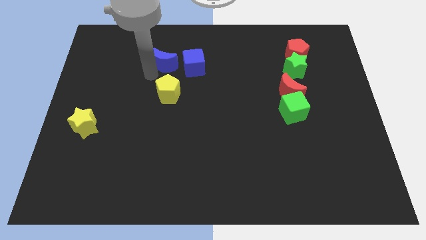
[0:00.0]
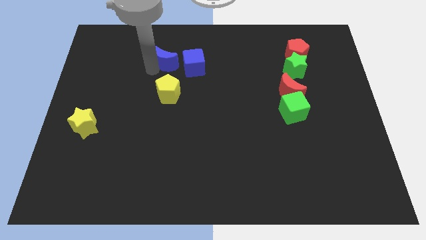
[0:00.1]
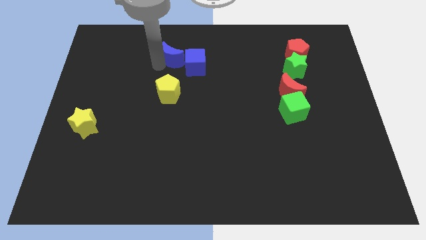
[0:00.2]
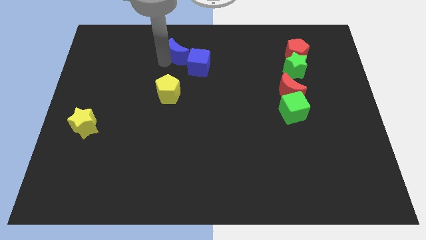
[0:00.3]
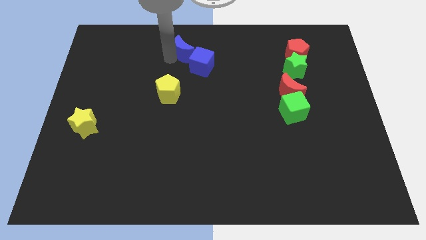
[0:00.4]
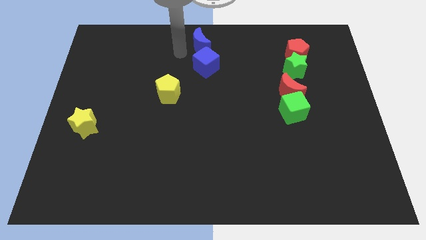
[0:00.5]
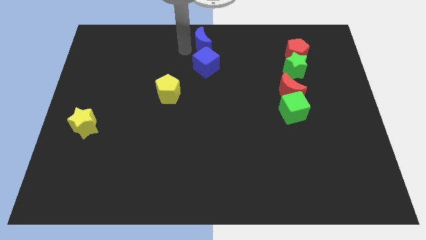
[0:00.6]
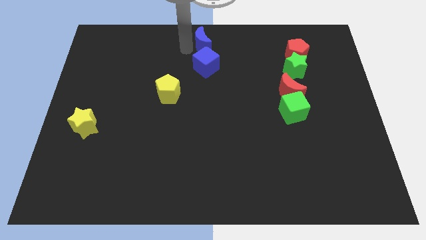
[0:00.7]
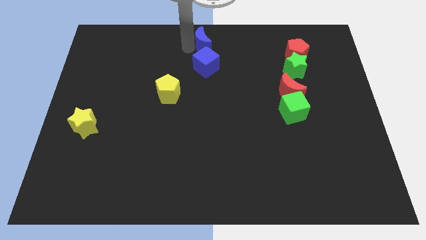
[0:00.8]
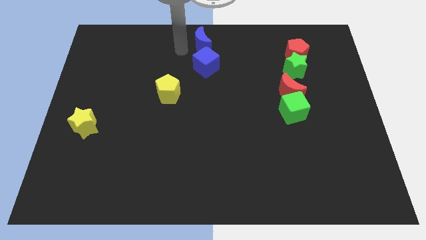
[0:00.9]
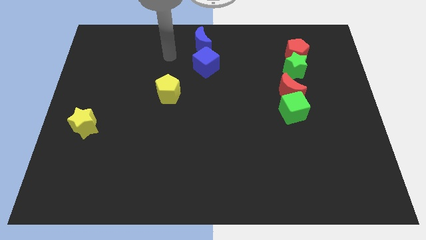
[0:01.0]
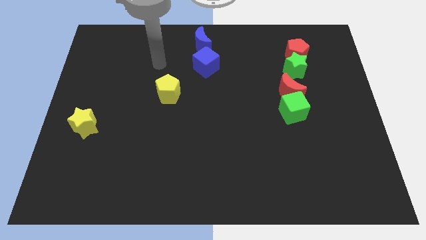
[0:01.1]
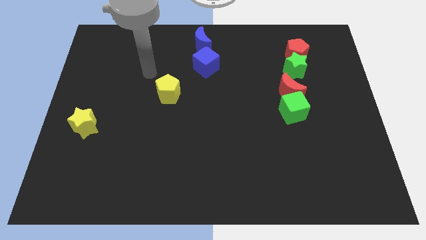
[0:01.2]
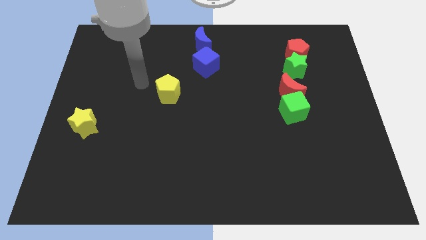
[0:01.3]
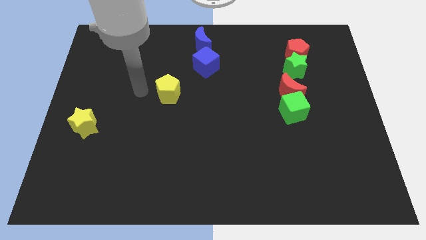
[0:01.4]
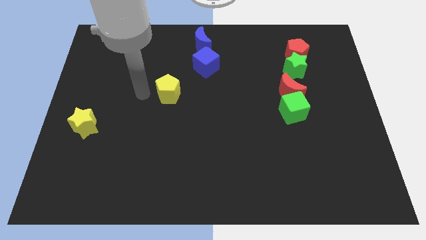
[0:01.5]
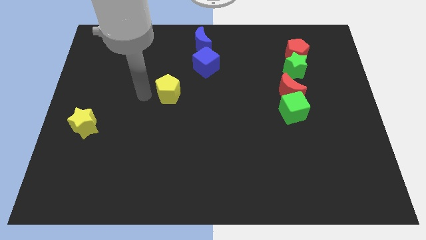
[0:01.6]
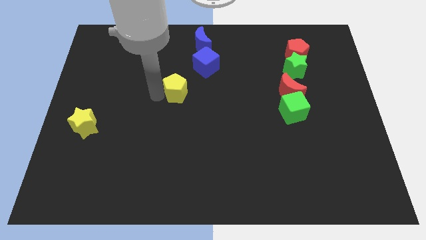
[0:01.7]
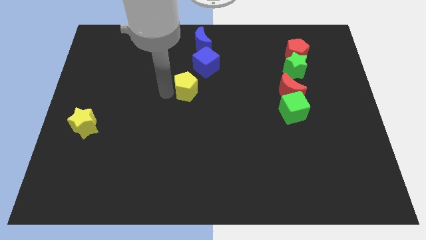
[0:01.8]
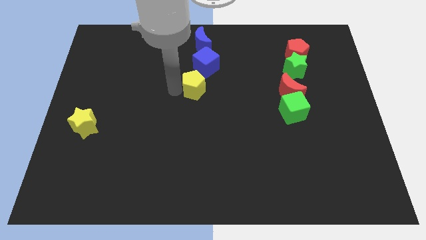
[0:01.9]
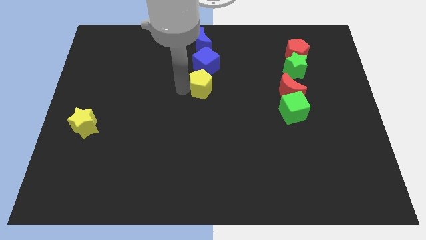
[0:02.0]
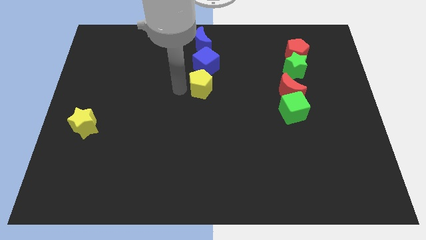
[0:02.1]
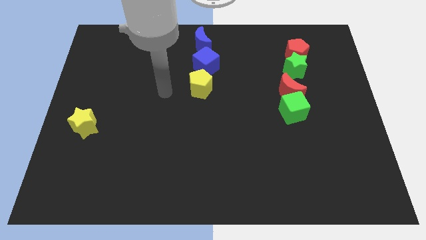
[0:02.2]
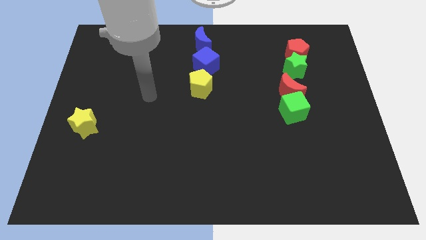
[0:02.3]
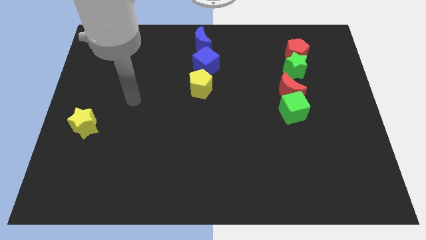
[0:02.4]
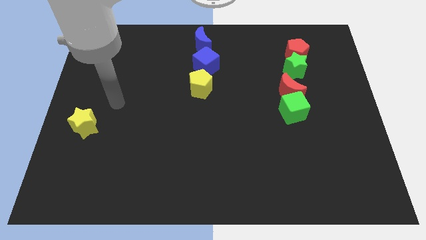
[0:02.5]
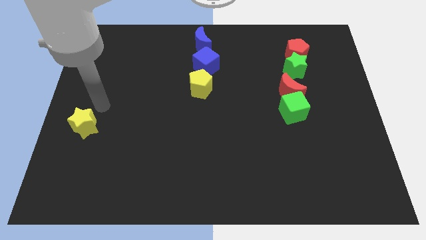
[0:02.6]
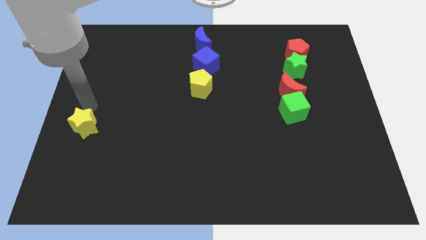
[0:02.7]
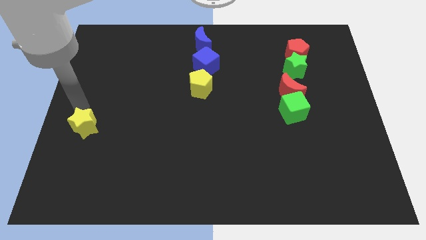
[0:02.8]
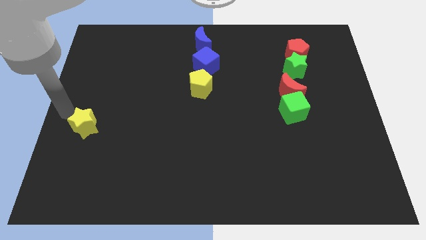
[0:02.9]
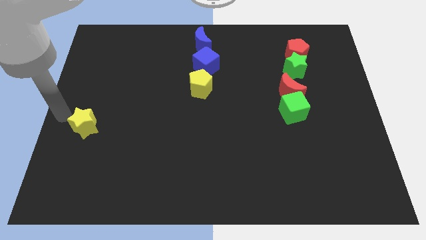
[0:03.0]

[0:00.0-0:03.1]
push the blue moon and yellow pentagon to the center

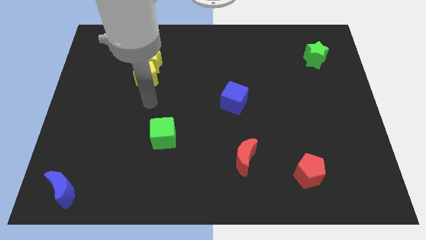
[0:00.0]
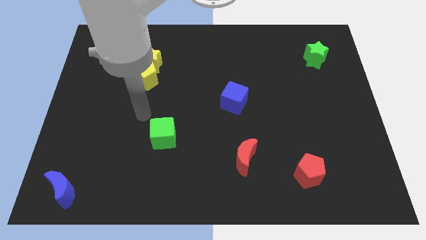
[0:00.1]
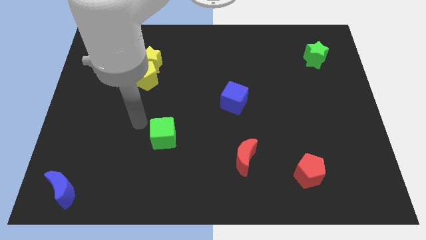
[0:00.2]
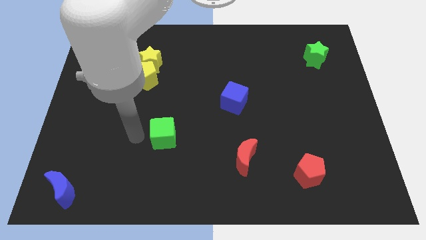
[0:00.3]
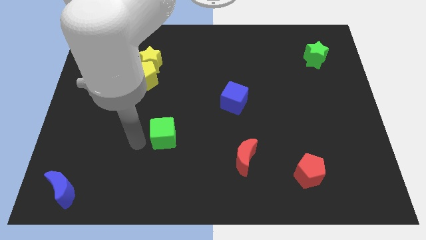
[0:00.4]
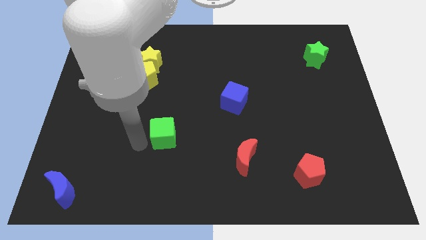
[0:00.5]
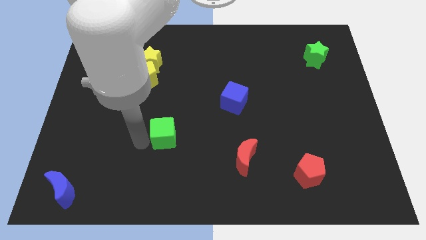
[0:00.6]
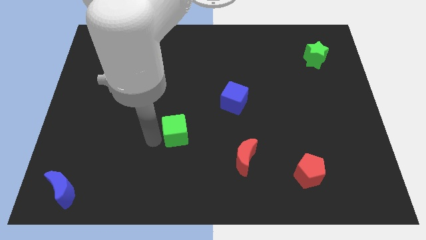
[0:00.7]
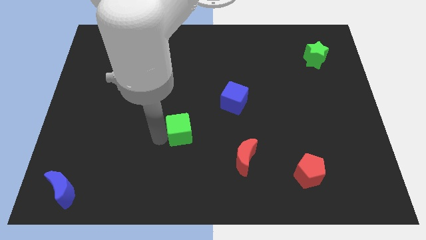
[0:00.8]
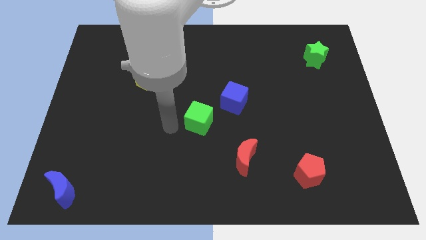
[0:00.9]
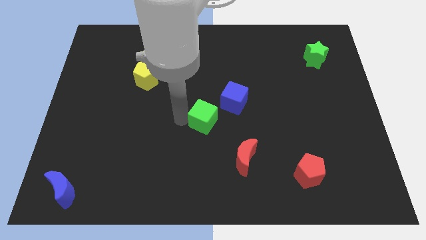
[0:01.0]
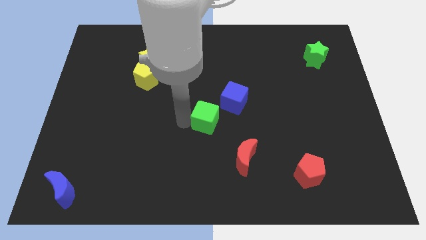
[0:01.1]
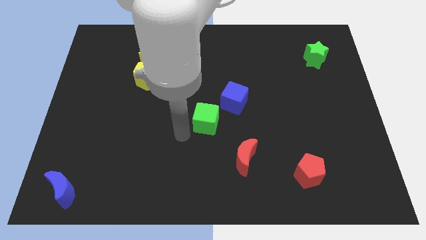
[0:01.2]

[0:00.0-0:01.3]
place green cube to the bottom left of the blue cube

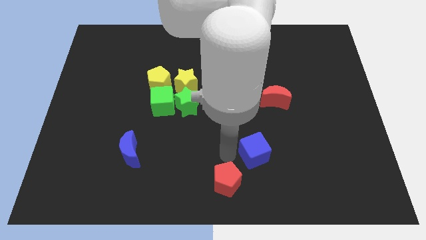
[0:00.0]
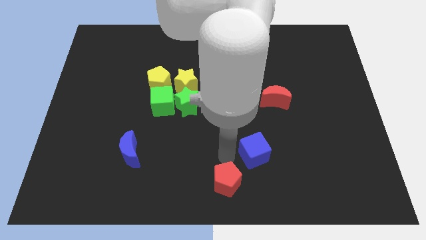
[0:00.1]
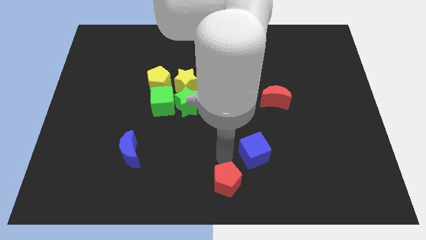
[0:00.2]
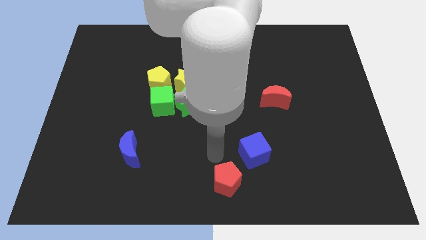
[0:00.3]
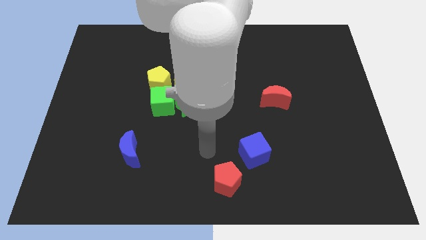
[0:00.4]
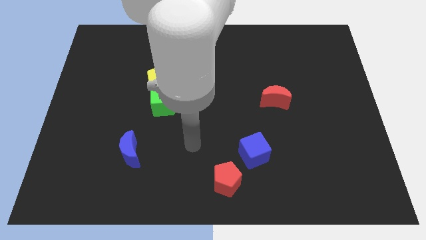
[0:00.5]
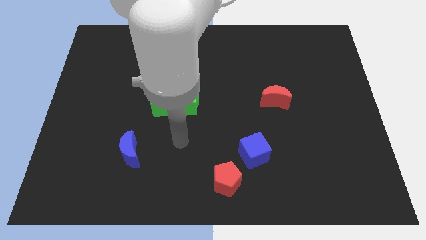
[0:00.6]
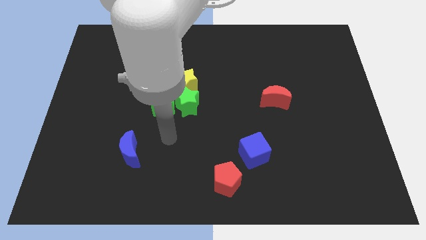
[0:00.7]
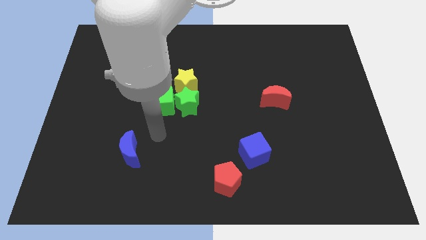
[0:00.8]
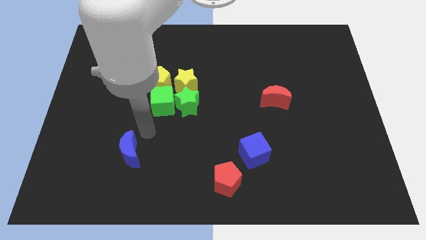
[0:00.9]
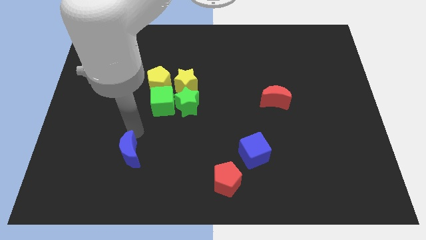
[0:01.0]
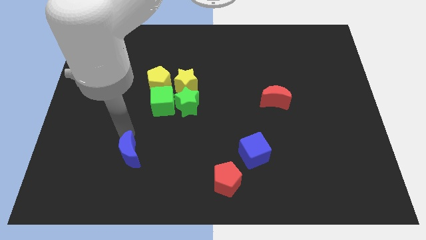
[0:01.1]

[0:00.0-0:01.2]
move you arm towards the top of the blue crescent

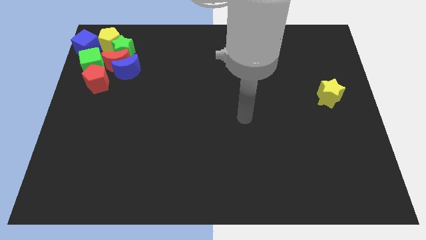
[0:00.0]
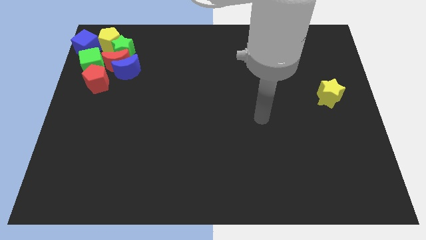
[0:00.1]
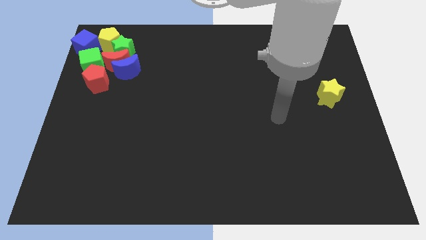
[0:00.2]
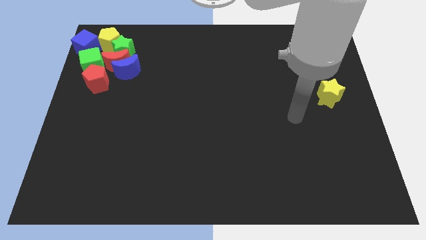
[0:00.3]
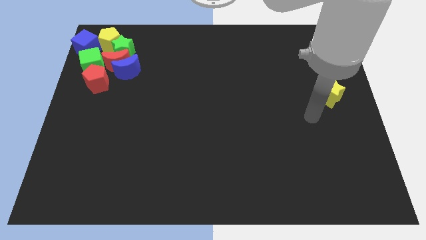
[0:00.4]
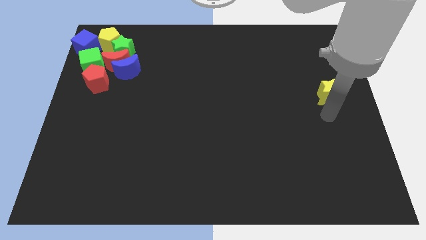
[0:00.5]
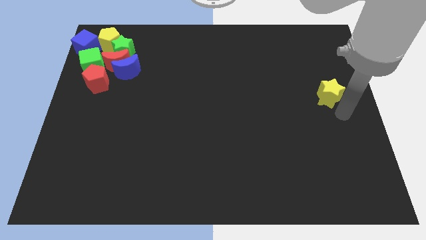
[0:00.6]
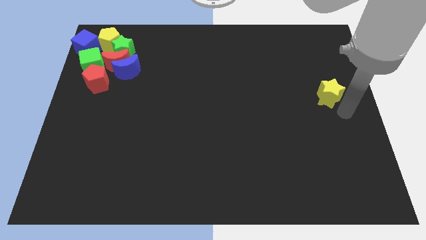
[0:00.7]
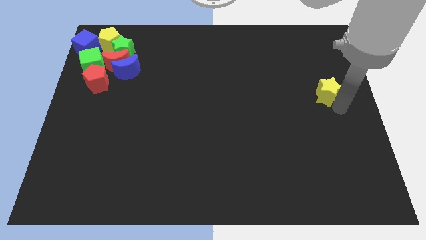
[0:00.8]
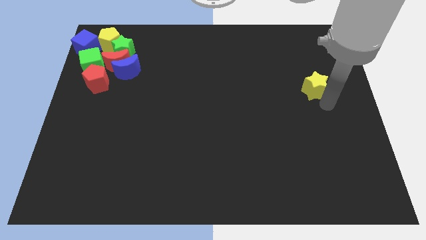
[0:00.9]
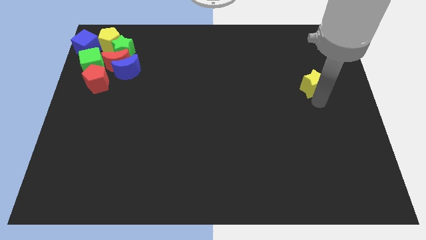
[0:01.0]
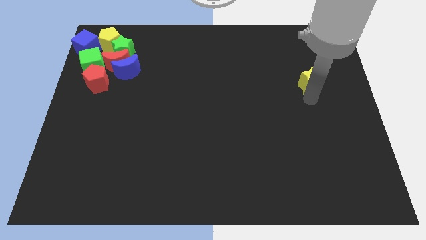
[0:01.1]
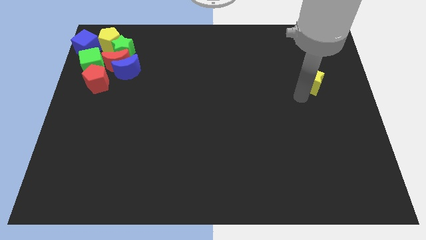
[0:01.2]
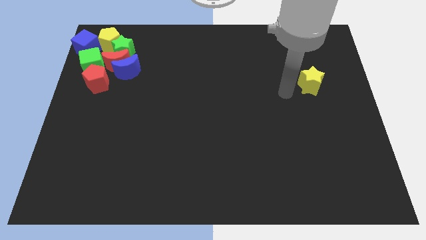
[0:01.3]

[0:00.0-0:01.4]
push the yellow star upward

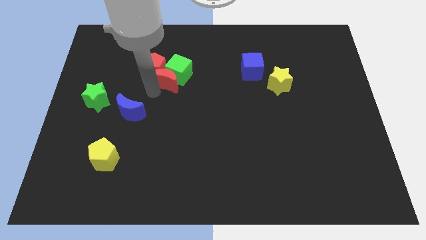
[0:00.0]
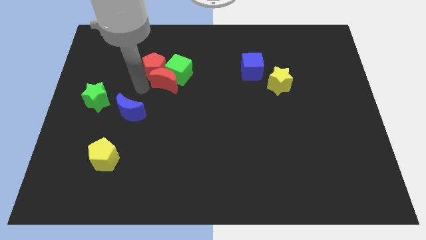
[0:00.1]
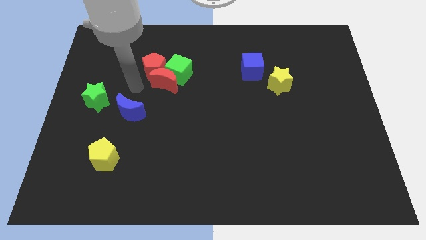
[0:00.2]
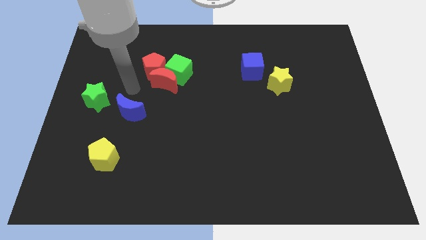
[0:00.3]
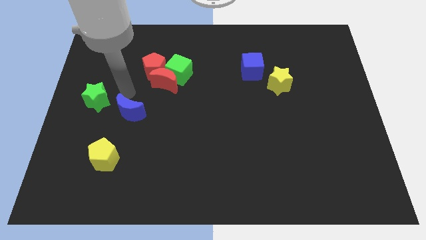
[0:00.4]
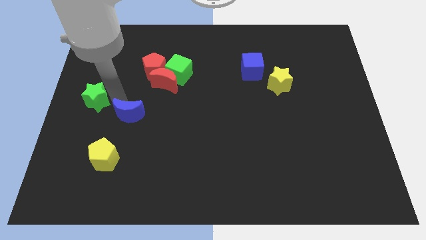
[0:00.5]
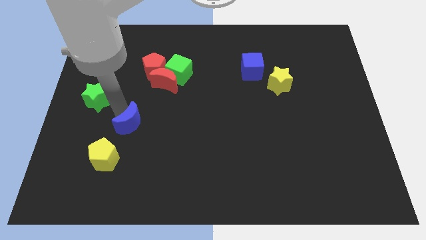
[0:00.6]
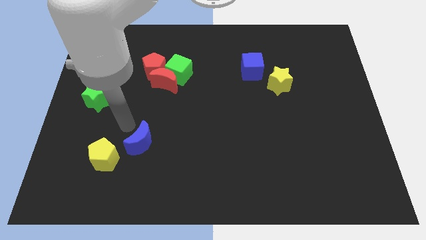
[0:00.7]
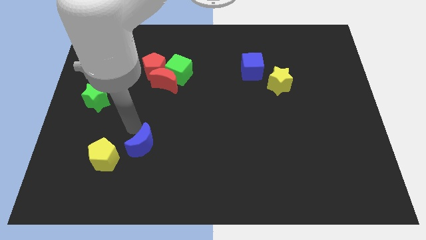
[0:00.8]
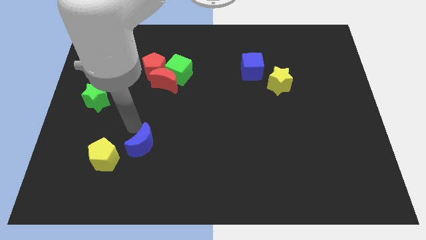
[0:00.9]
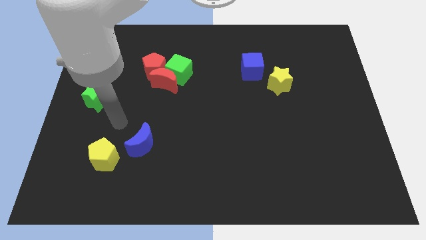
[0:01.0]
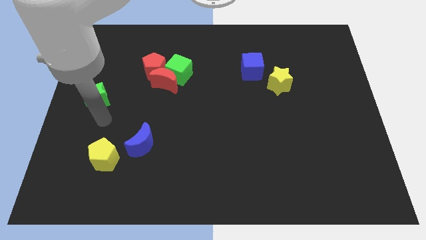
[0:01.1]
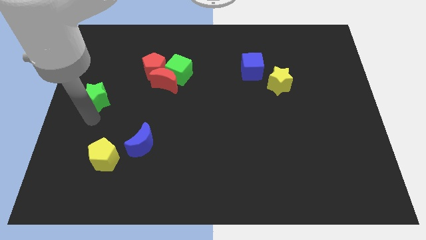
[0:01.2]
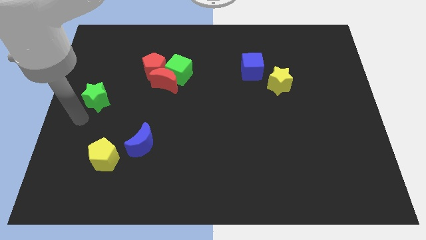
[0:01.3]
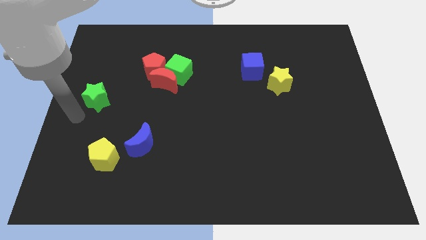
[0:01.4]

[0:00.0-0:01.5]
slide the blue moon towards the bottom side

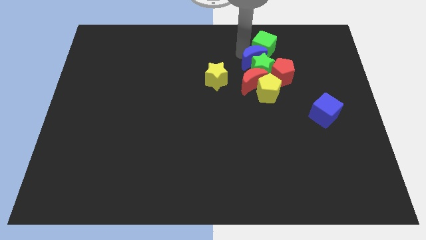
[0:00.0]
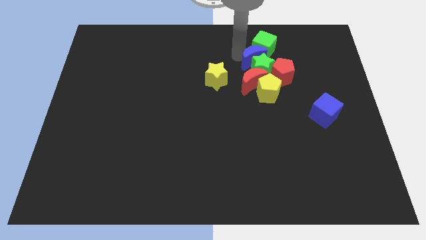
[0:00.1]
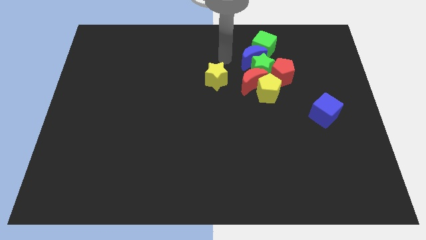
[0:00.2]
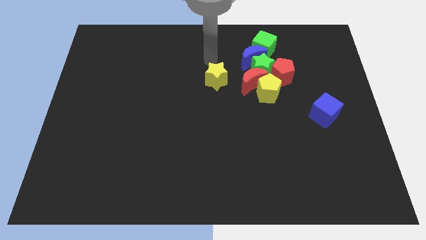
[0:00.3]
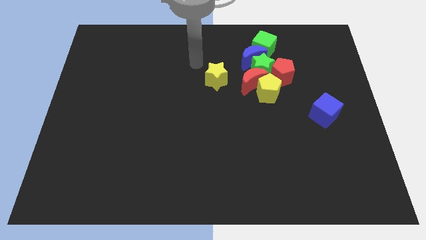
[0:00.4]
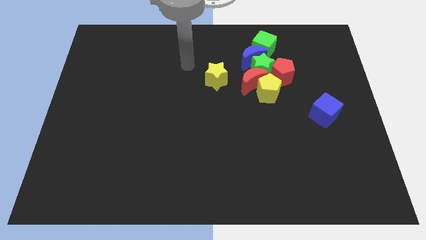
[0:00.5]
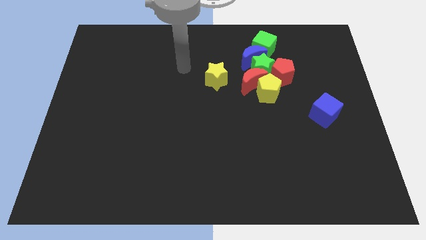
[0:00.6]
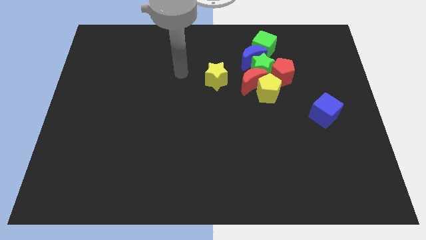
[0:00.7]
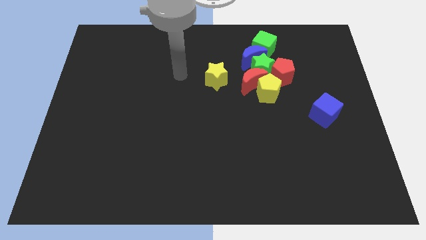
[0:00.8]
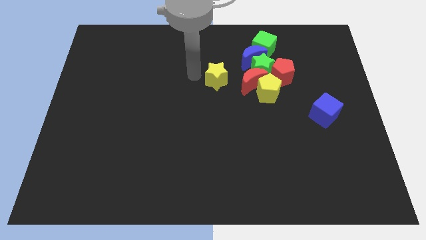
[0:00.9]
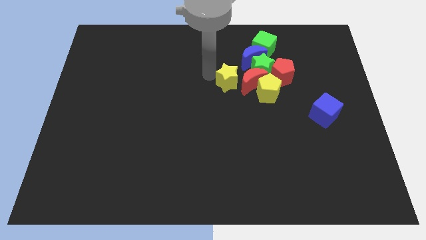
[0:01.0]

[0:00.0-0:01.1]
slide yellow star towards the left of the red moon
